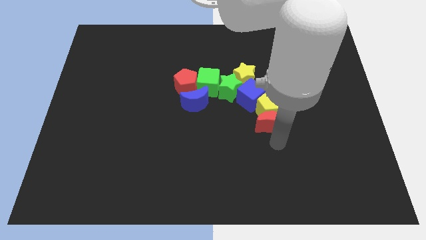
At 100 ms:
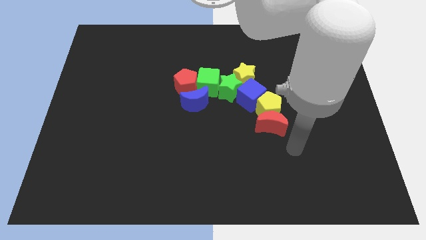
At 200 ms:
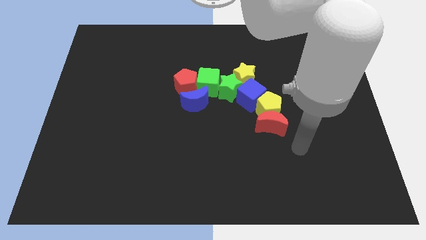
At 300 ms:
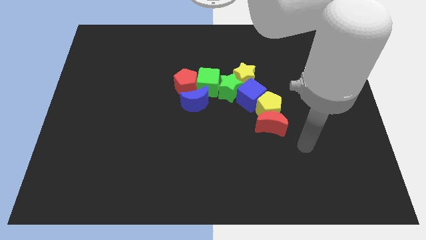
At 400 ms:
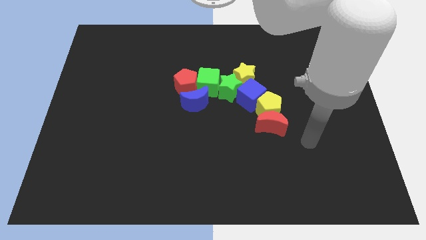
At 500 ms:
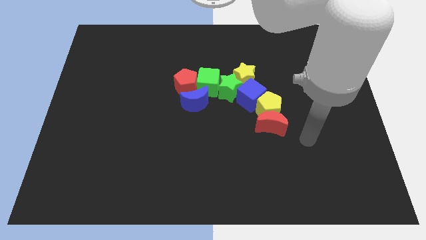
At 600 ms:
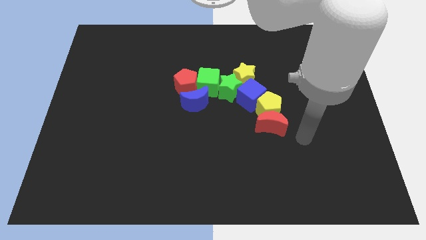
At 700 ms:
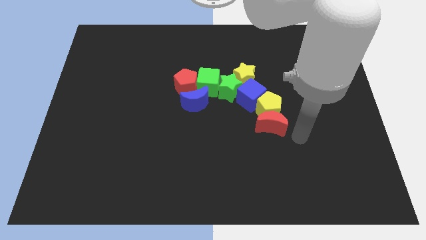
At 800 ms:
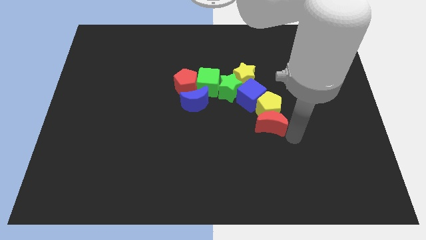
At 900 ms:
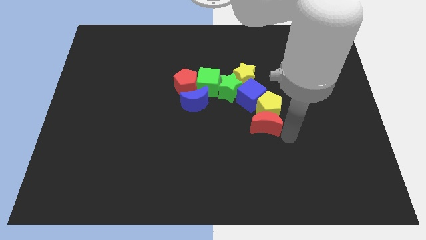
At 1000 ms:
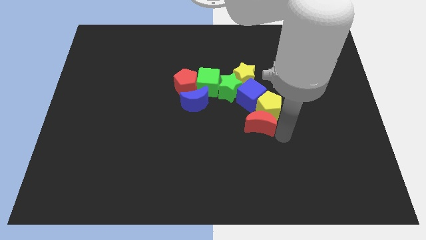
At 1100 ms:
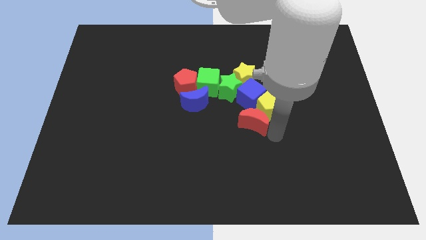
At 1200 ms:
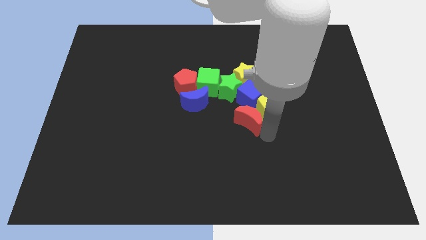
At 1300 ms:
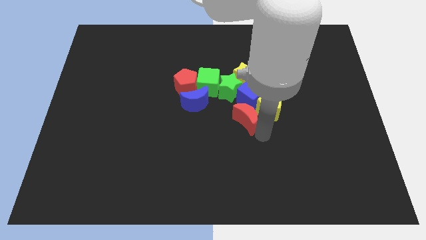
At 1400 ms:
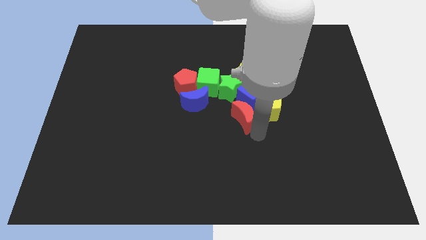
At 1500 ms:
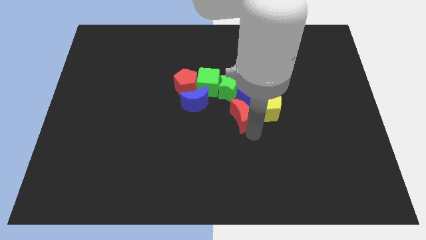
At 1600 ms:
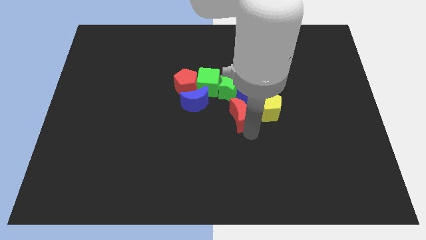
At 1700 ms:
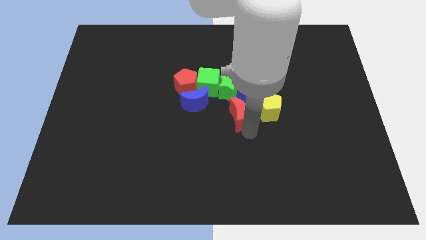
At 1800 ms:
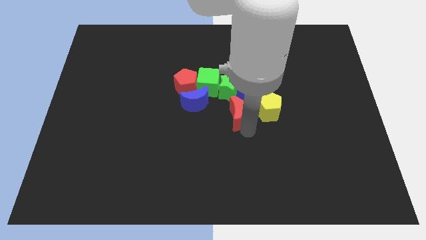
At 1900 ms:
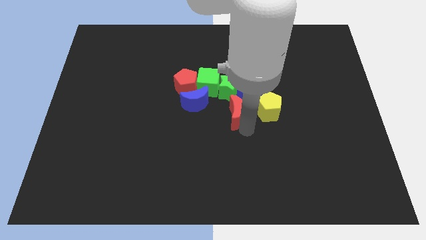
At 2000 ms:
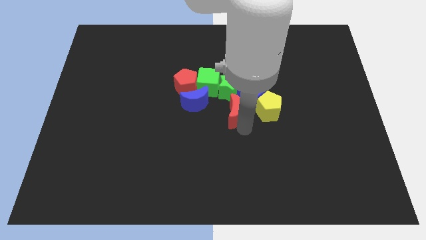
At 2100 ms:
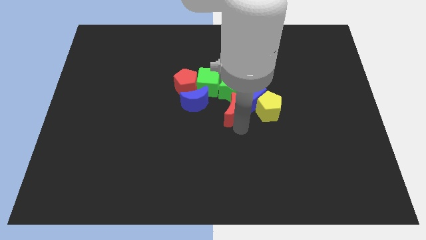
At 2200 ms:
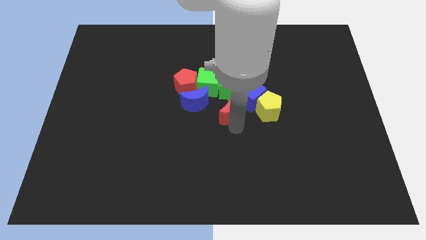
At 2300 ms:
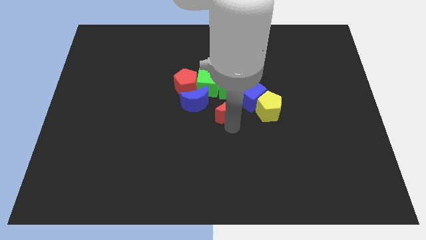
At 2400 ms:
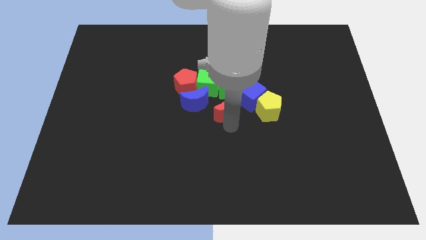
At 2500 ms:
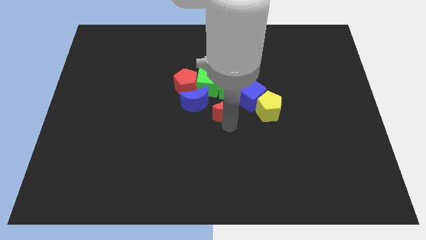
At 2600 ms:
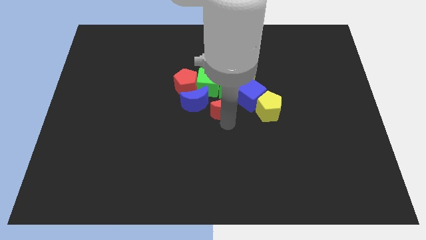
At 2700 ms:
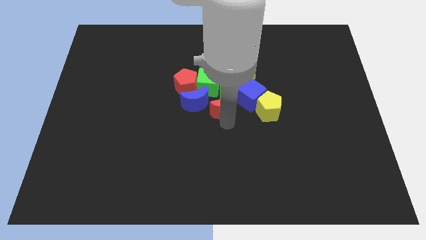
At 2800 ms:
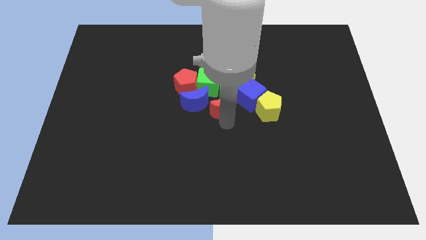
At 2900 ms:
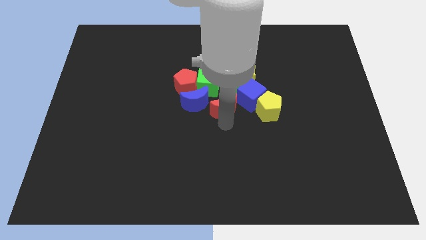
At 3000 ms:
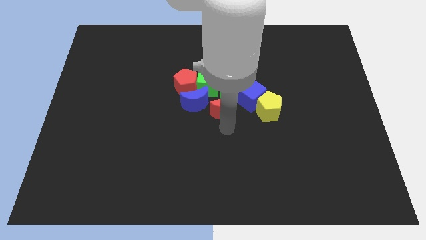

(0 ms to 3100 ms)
separate the red crescent from the yellow pentagon

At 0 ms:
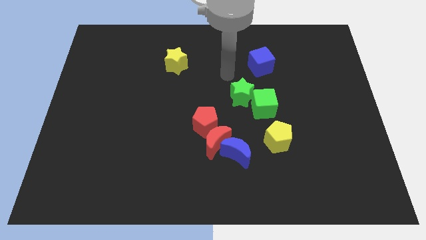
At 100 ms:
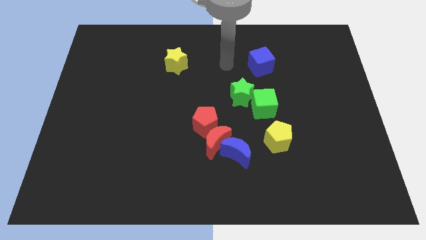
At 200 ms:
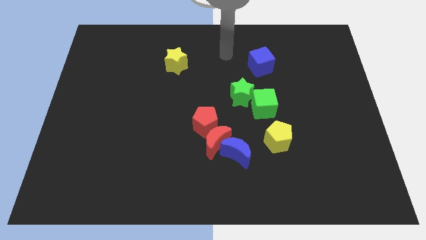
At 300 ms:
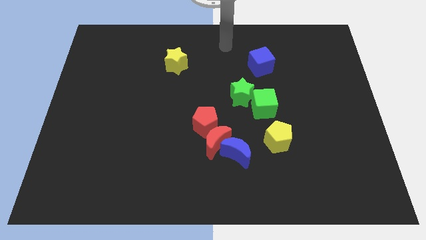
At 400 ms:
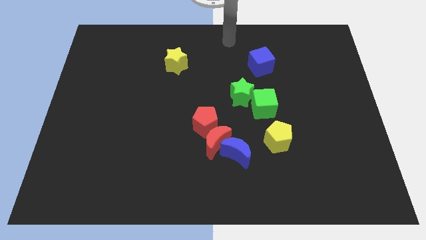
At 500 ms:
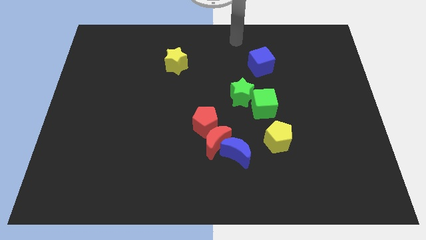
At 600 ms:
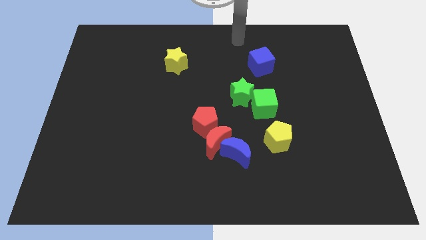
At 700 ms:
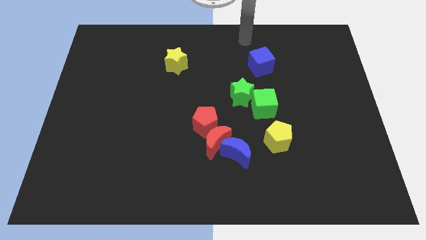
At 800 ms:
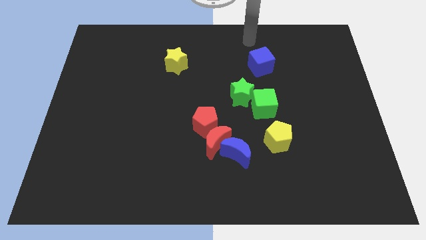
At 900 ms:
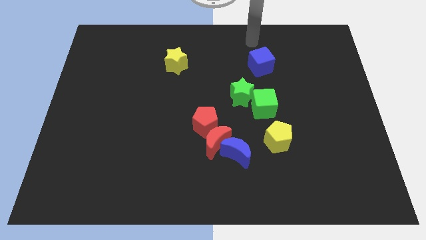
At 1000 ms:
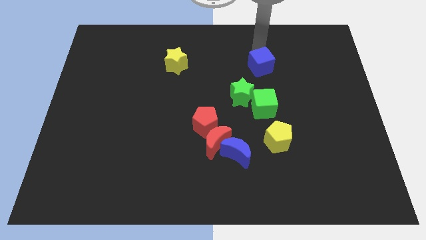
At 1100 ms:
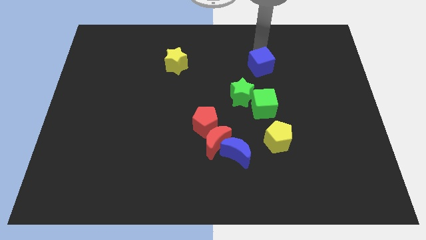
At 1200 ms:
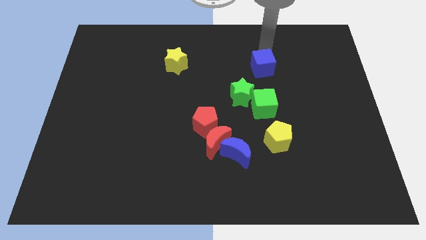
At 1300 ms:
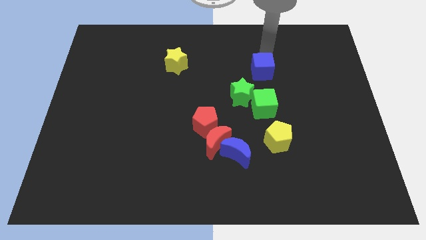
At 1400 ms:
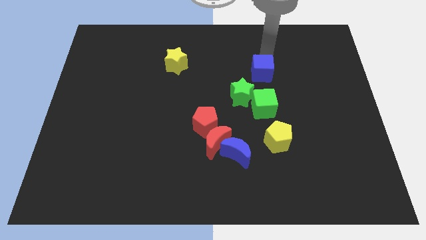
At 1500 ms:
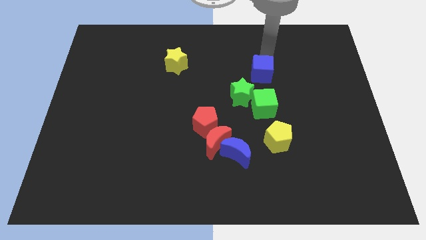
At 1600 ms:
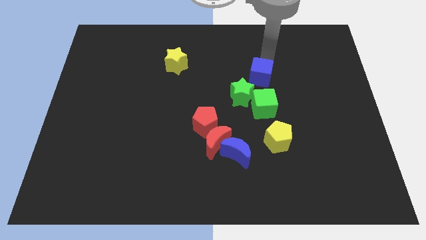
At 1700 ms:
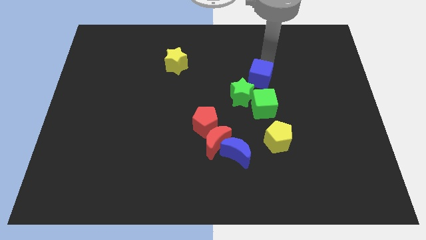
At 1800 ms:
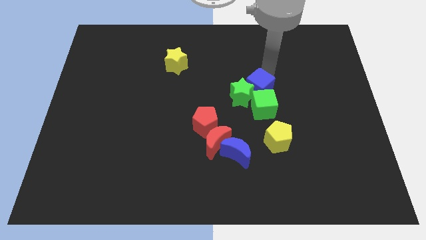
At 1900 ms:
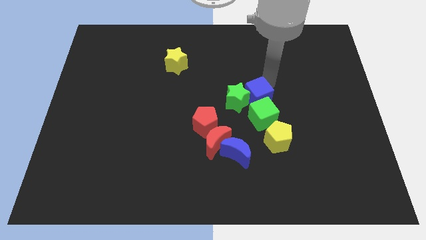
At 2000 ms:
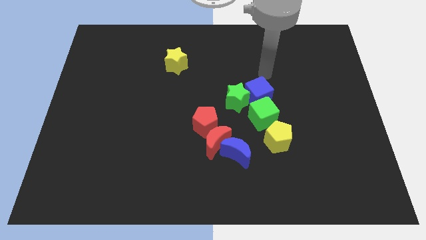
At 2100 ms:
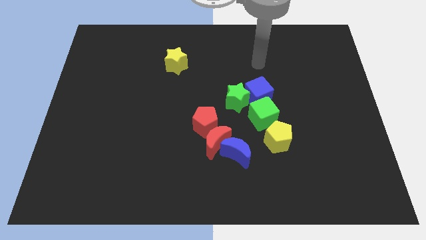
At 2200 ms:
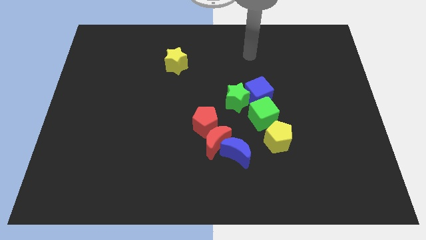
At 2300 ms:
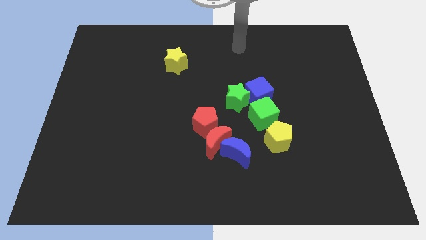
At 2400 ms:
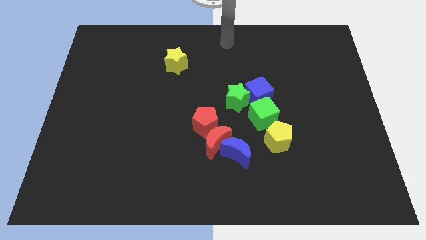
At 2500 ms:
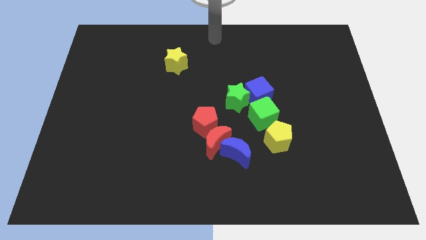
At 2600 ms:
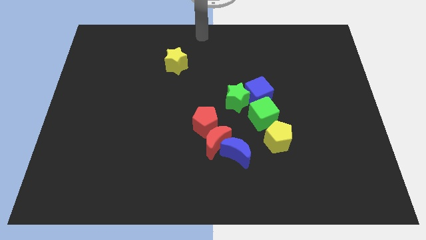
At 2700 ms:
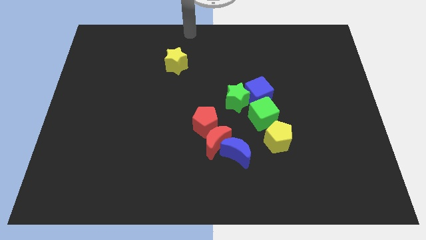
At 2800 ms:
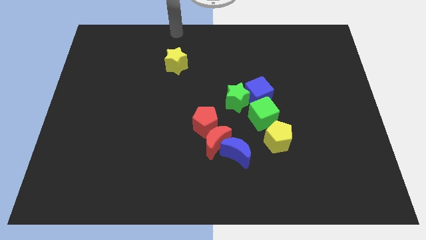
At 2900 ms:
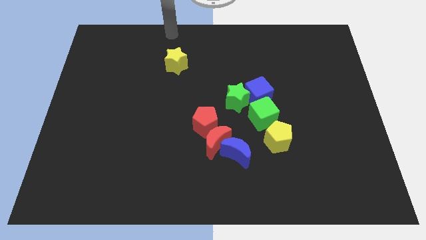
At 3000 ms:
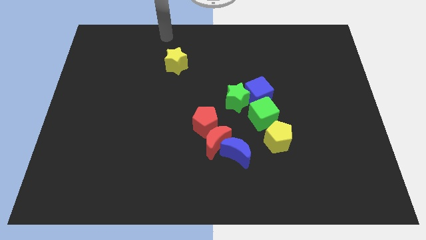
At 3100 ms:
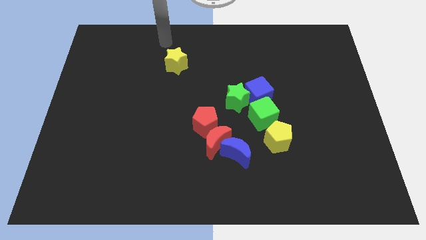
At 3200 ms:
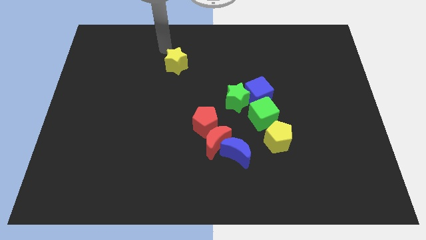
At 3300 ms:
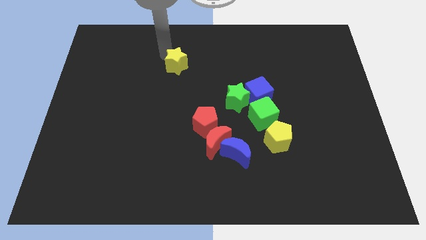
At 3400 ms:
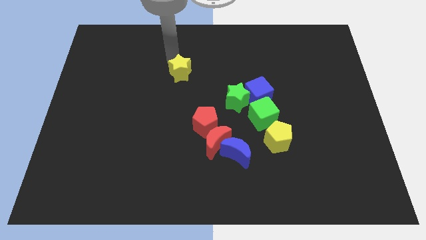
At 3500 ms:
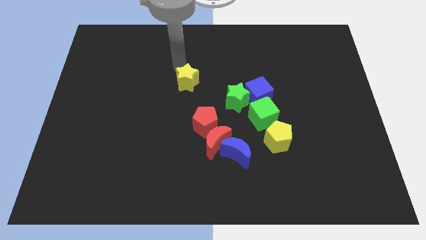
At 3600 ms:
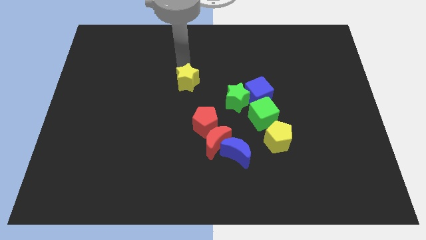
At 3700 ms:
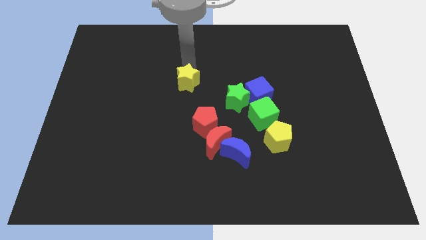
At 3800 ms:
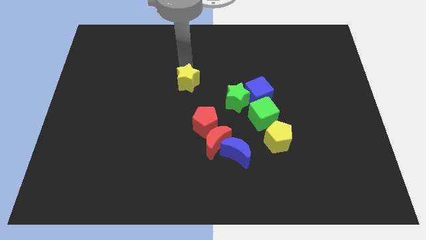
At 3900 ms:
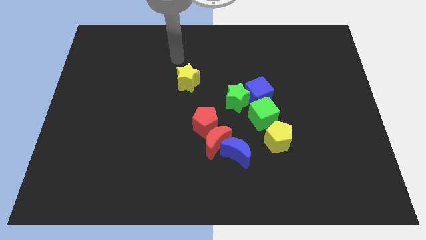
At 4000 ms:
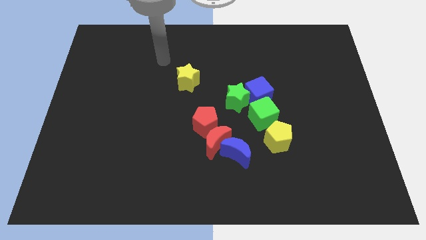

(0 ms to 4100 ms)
push the blue cube into the green cube

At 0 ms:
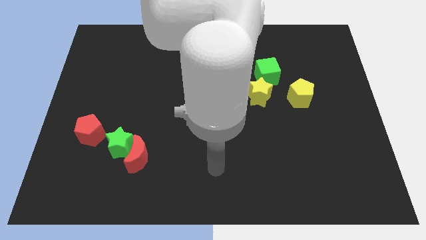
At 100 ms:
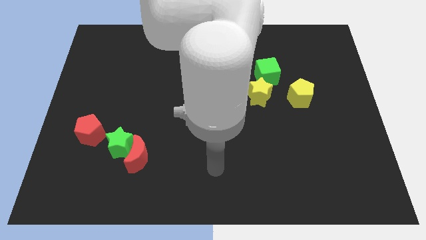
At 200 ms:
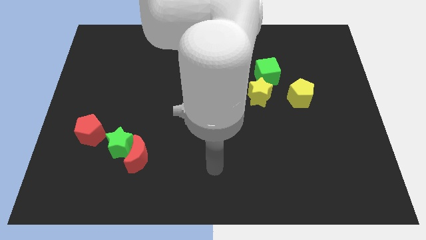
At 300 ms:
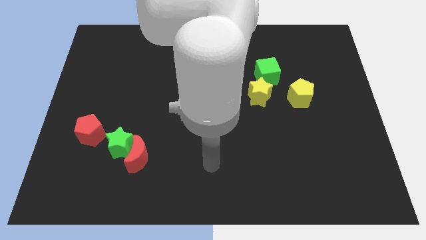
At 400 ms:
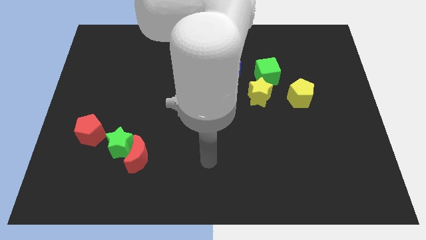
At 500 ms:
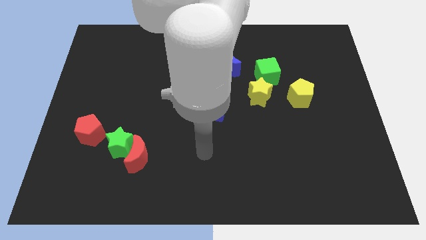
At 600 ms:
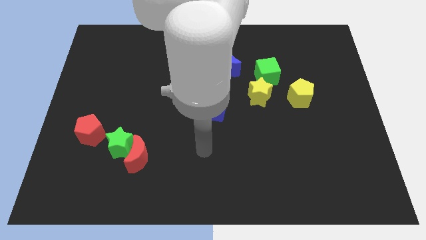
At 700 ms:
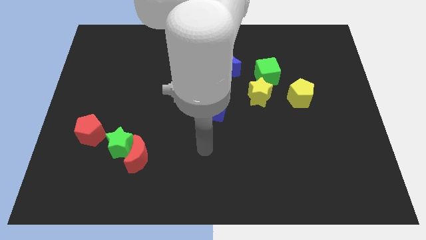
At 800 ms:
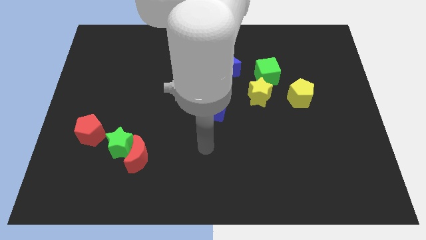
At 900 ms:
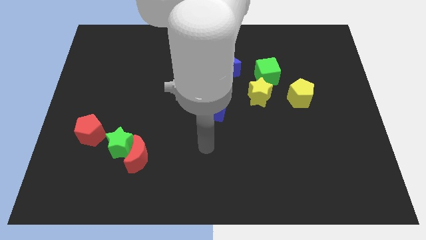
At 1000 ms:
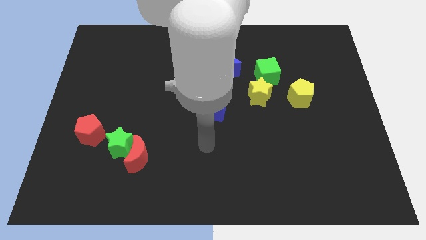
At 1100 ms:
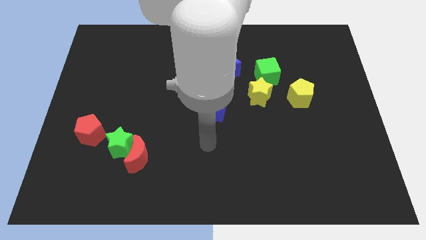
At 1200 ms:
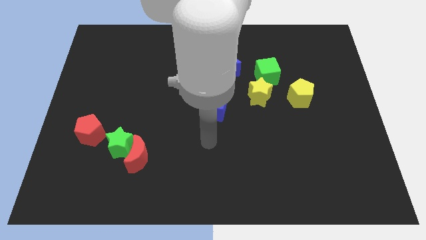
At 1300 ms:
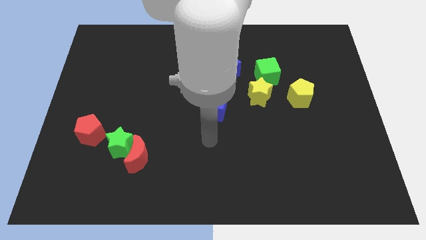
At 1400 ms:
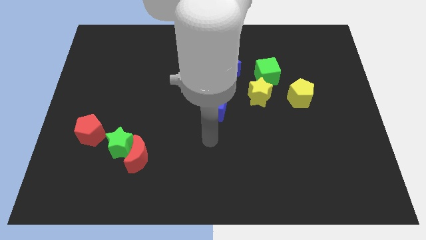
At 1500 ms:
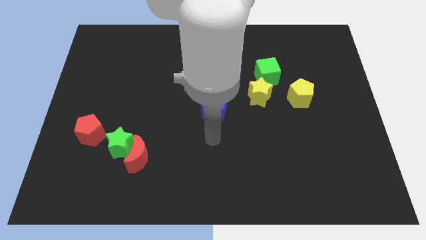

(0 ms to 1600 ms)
place your arm to the bottom side of the blue cube
